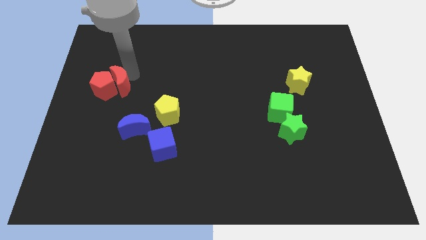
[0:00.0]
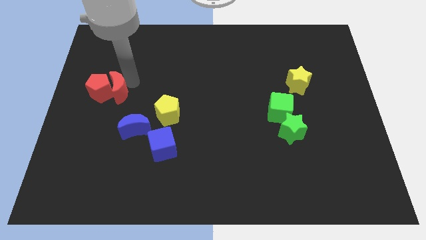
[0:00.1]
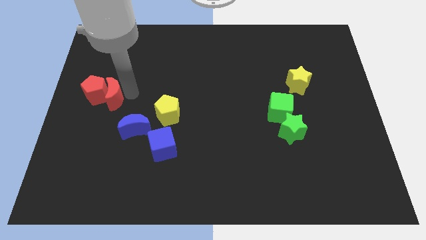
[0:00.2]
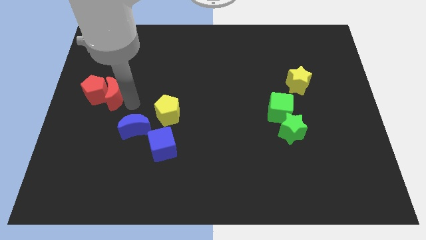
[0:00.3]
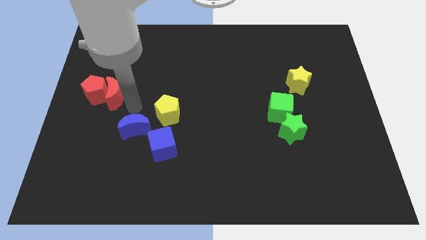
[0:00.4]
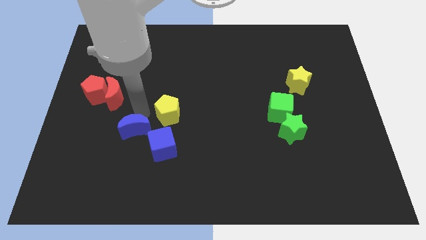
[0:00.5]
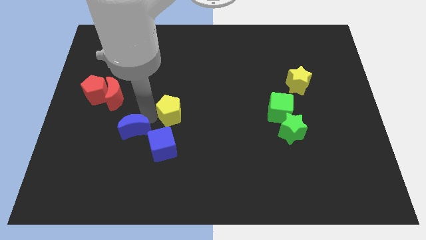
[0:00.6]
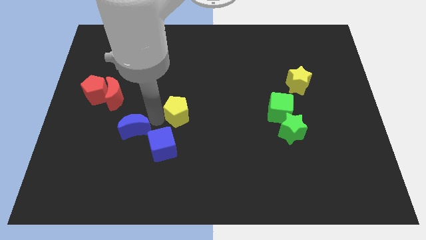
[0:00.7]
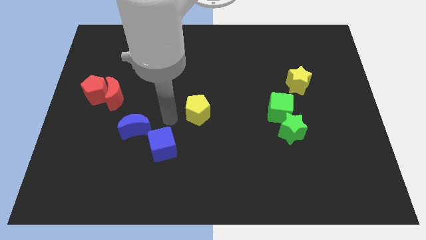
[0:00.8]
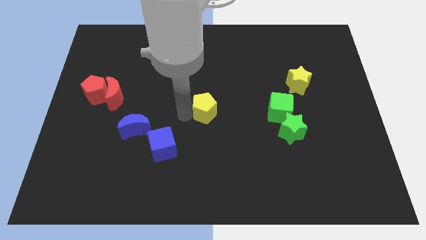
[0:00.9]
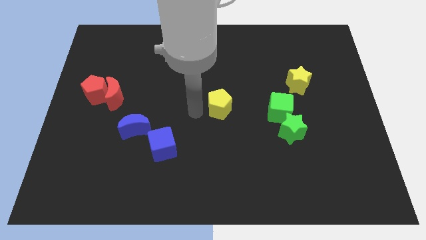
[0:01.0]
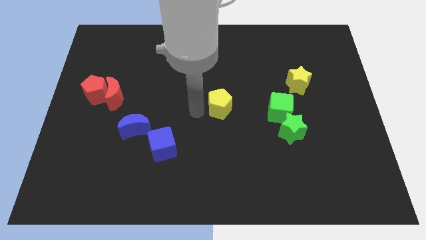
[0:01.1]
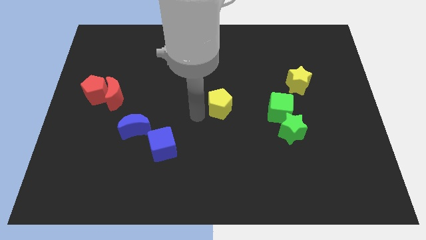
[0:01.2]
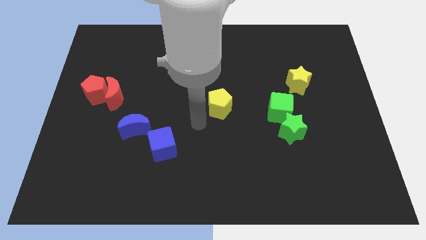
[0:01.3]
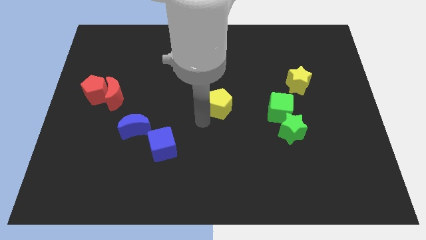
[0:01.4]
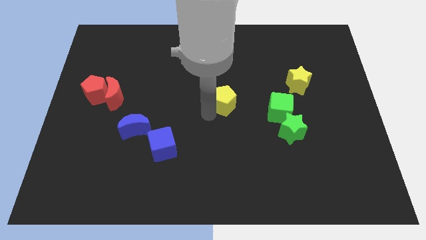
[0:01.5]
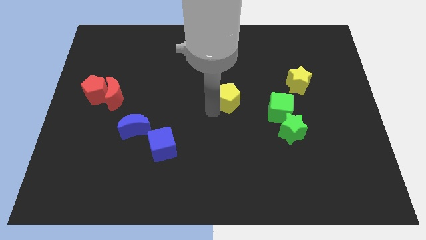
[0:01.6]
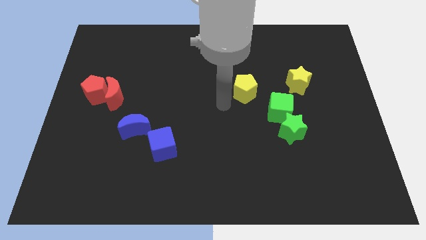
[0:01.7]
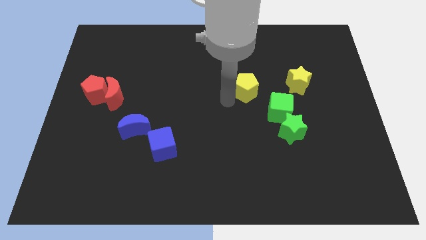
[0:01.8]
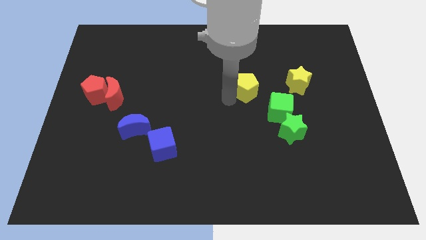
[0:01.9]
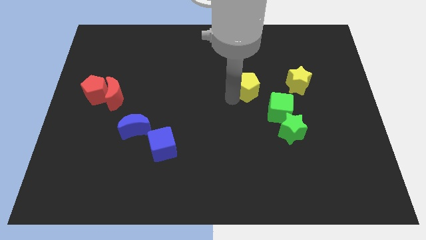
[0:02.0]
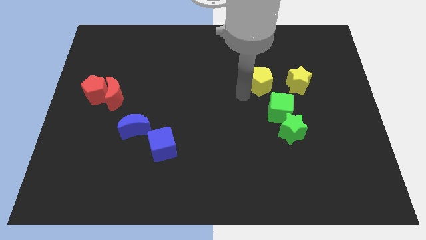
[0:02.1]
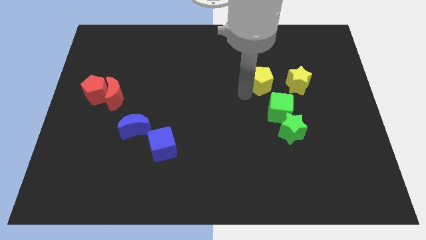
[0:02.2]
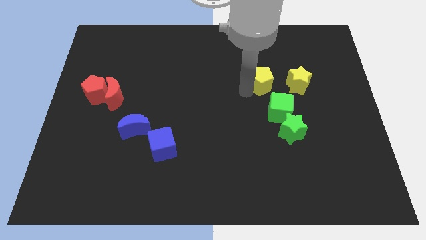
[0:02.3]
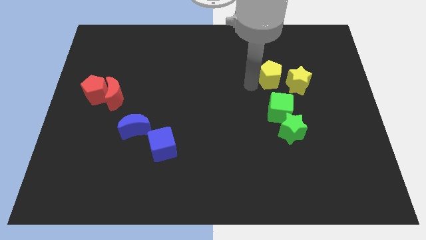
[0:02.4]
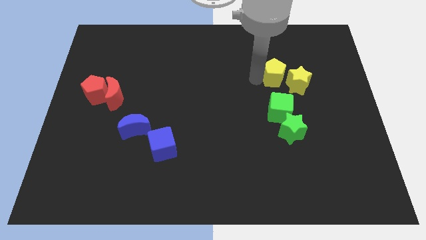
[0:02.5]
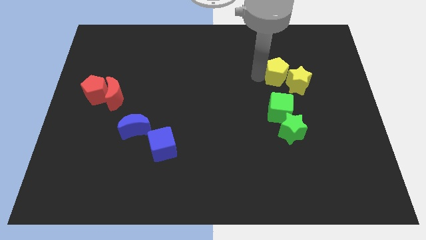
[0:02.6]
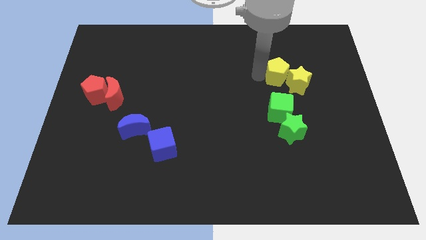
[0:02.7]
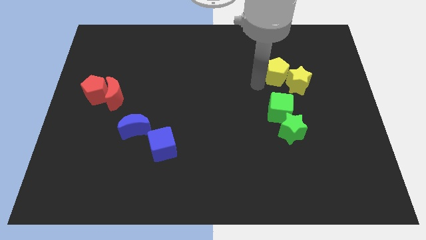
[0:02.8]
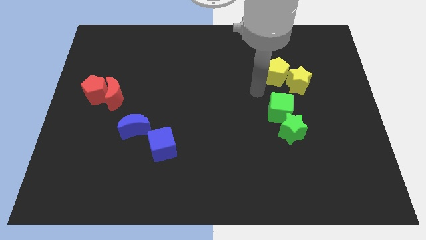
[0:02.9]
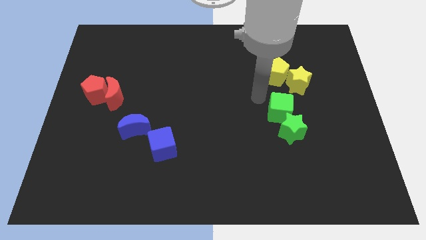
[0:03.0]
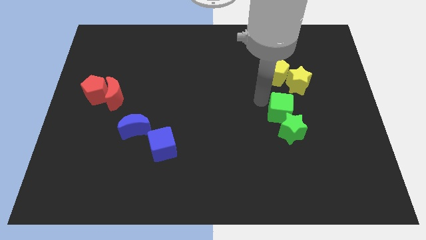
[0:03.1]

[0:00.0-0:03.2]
push yellow pentagon to the top left side of the yellow star

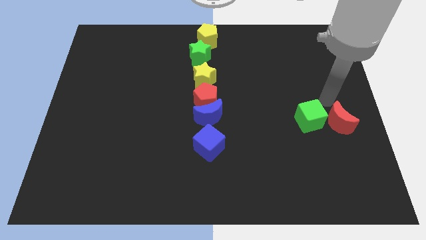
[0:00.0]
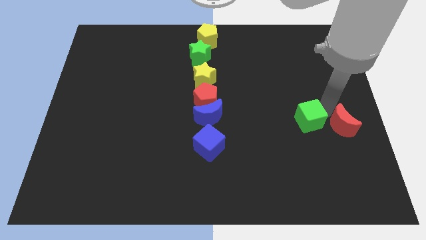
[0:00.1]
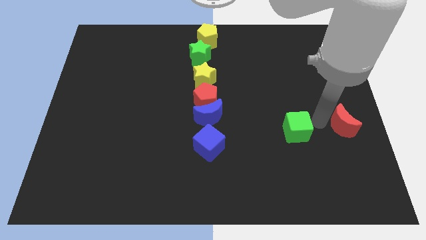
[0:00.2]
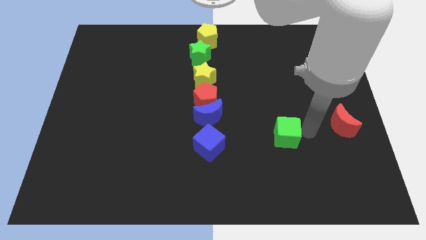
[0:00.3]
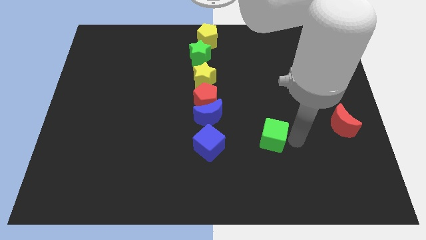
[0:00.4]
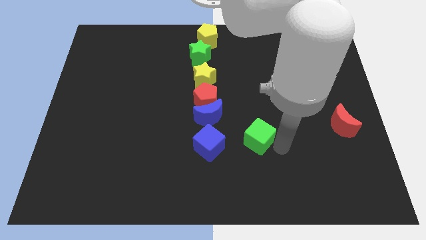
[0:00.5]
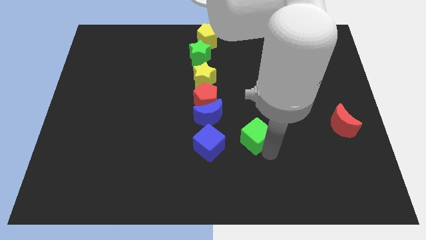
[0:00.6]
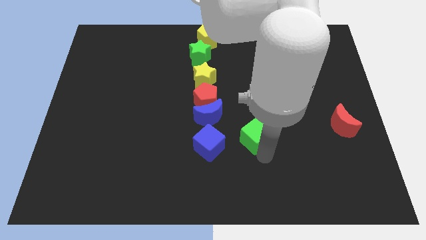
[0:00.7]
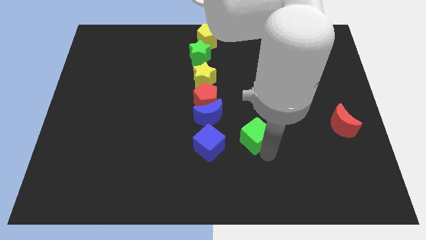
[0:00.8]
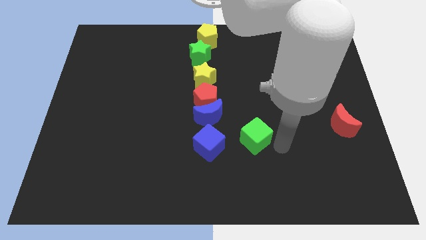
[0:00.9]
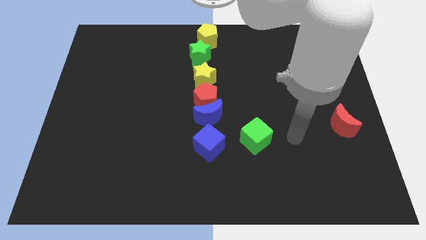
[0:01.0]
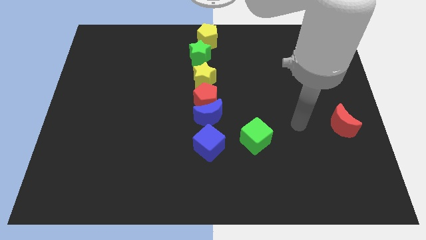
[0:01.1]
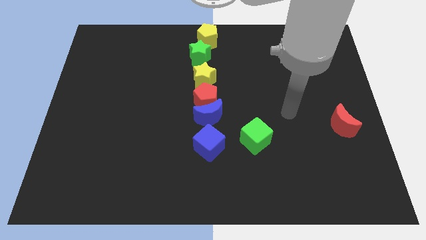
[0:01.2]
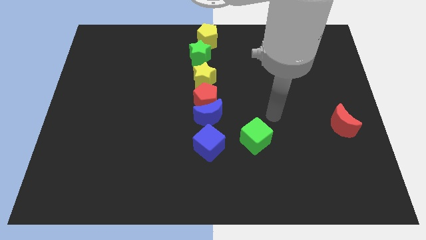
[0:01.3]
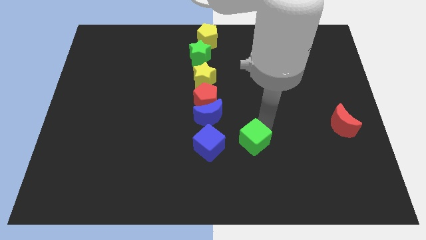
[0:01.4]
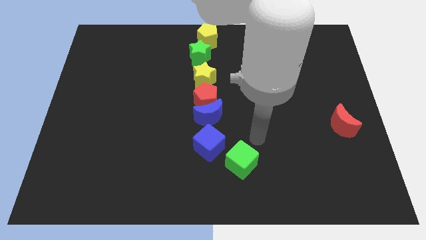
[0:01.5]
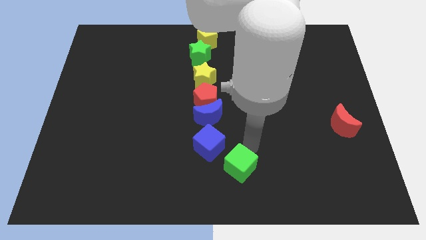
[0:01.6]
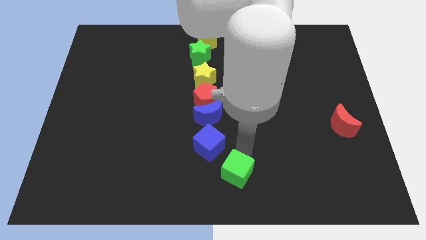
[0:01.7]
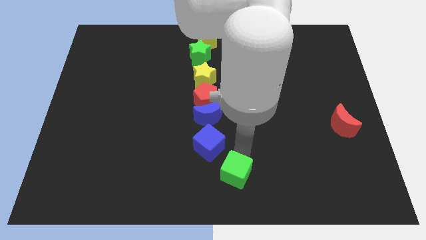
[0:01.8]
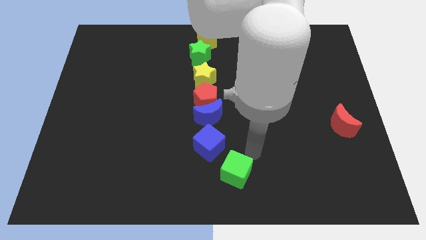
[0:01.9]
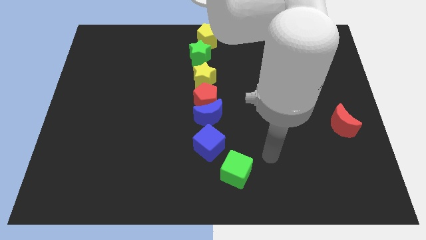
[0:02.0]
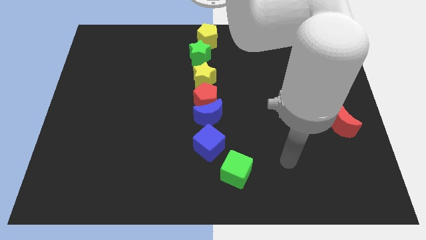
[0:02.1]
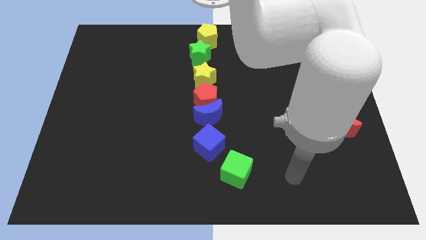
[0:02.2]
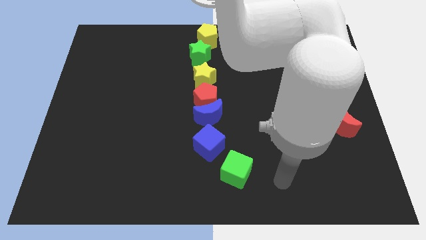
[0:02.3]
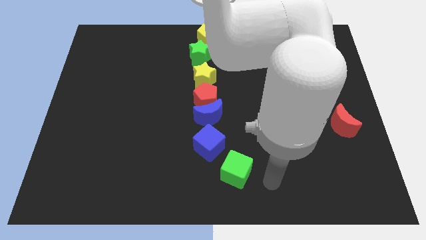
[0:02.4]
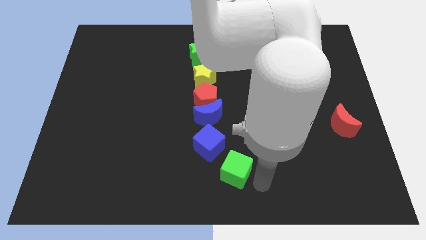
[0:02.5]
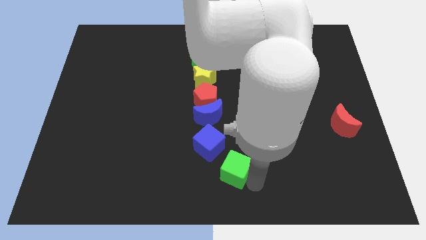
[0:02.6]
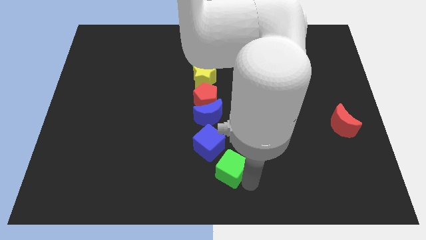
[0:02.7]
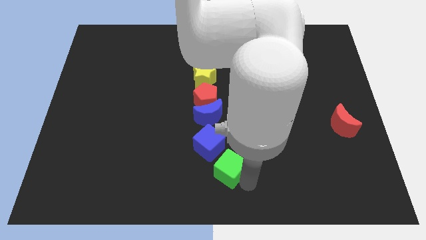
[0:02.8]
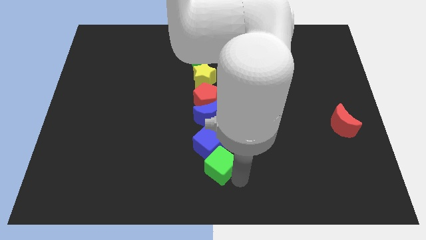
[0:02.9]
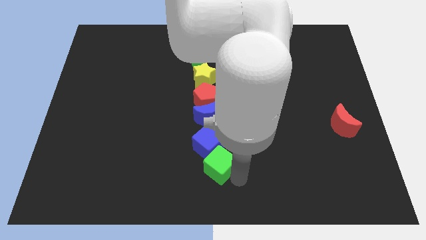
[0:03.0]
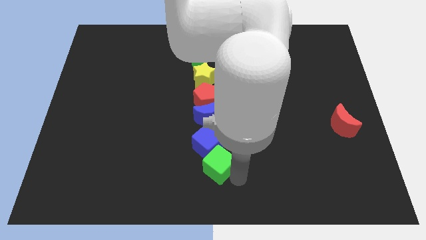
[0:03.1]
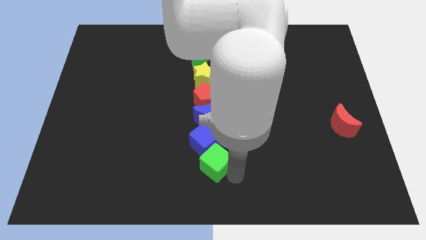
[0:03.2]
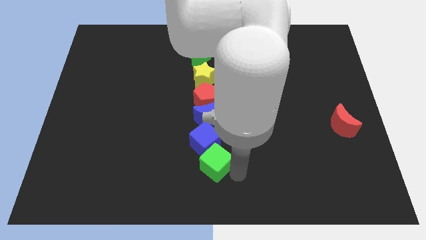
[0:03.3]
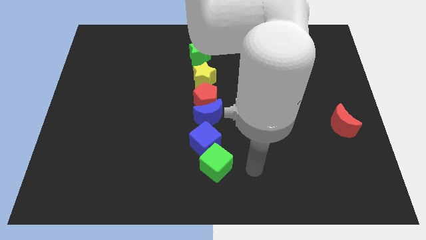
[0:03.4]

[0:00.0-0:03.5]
push the green cube into the bottom side of the blue cube

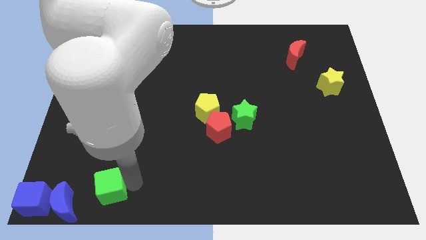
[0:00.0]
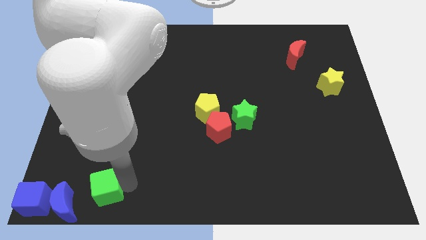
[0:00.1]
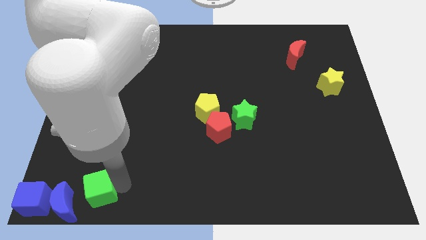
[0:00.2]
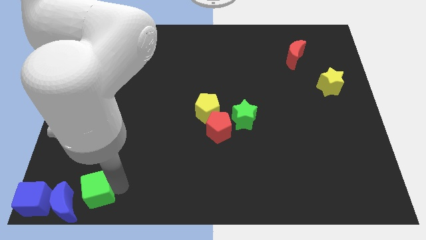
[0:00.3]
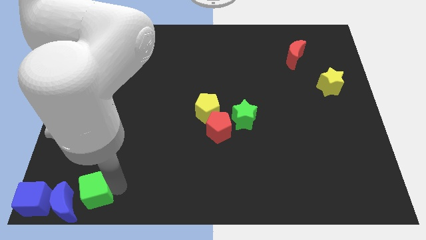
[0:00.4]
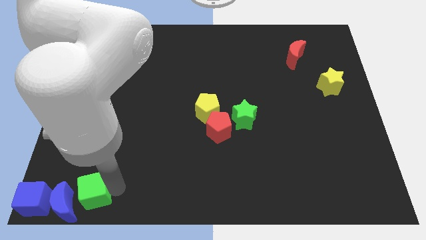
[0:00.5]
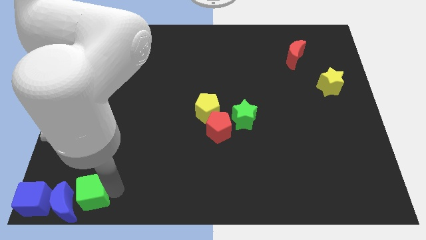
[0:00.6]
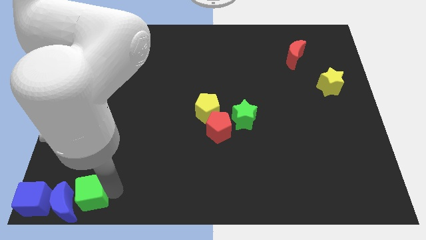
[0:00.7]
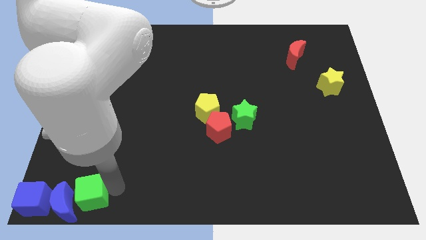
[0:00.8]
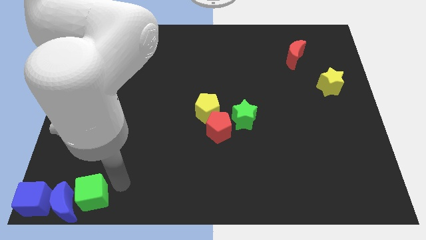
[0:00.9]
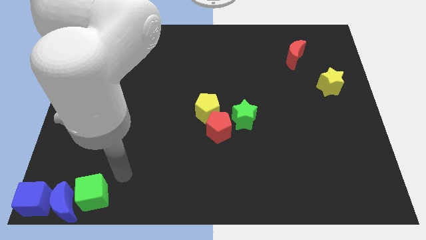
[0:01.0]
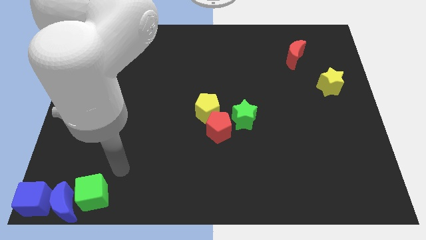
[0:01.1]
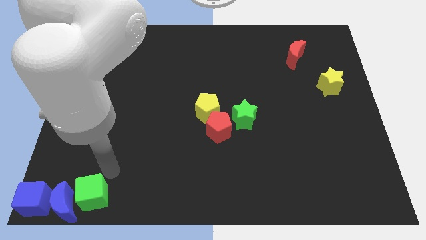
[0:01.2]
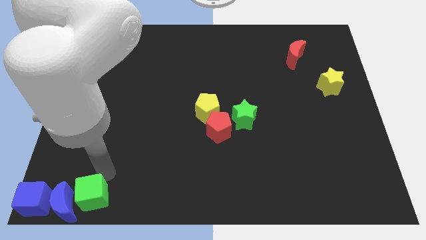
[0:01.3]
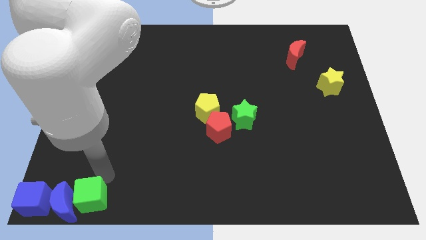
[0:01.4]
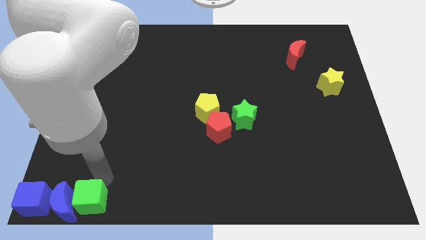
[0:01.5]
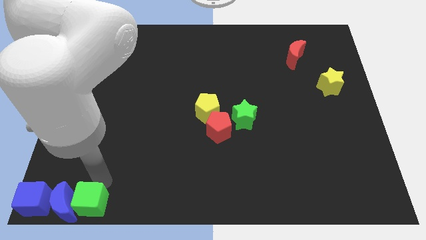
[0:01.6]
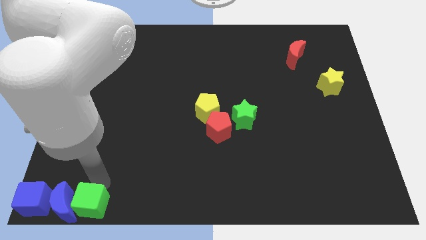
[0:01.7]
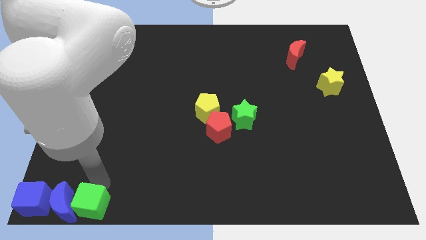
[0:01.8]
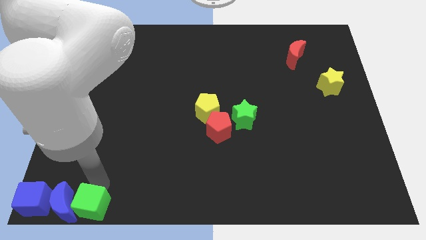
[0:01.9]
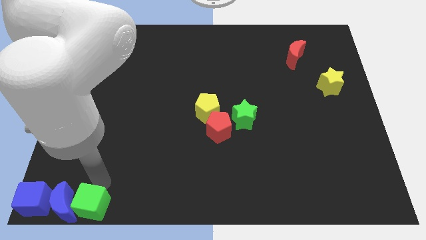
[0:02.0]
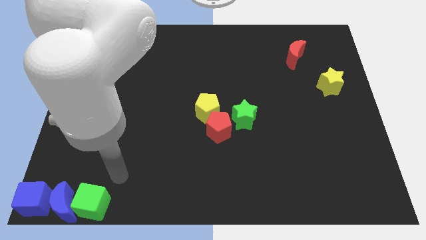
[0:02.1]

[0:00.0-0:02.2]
slide the green cube into the right side of the blue crescent

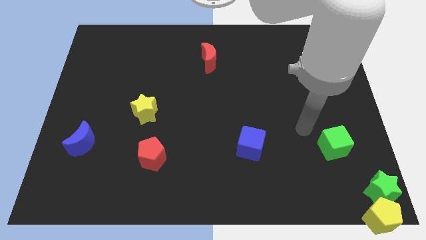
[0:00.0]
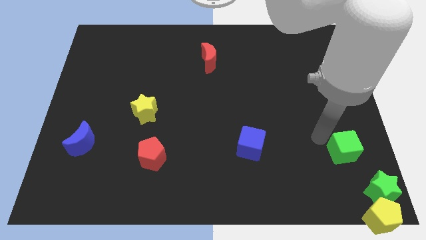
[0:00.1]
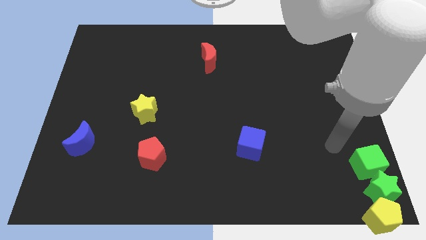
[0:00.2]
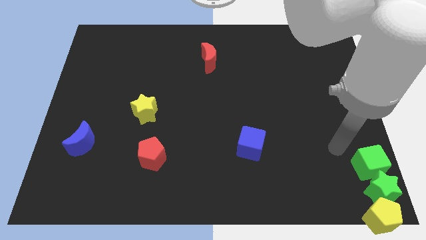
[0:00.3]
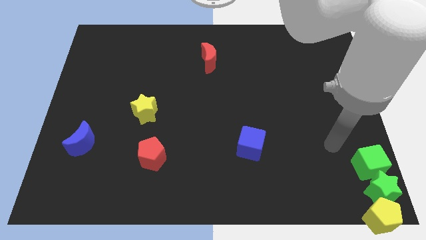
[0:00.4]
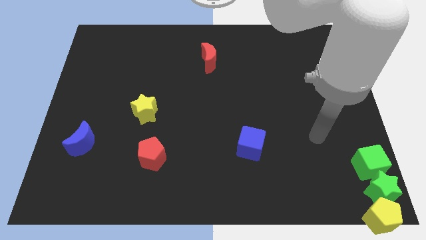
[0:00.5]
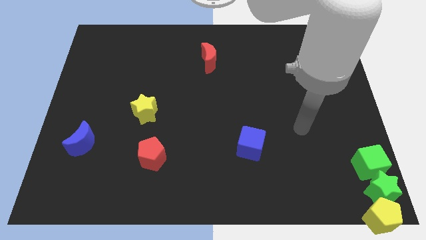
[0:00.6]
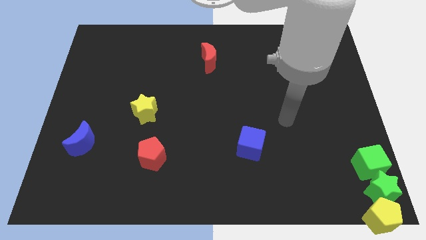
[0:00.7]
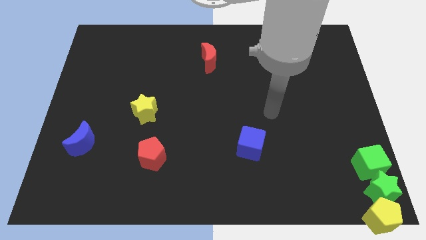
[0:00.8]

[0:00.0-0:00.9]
place the green cube above the green star
